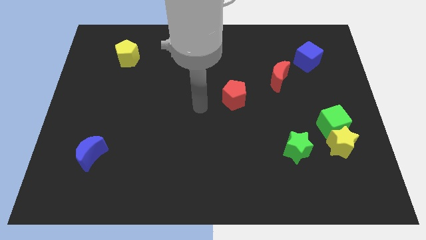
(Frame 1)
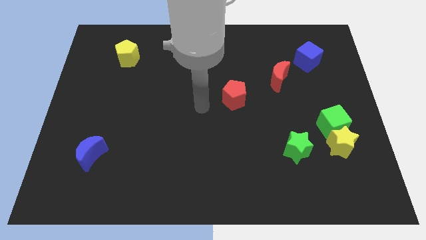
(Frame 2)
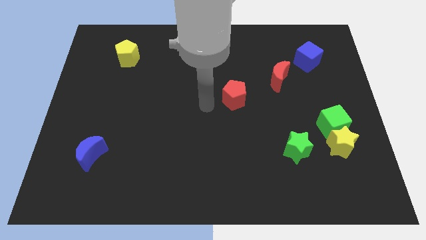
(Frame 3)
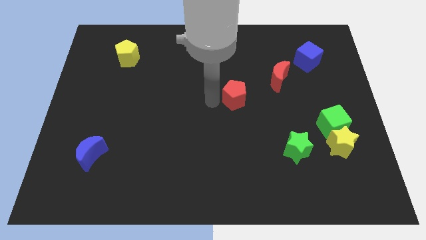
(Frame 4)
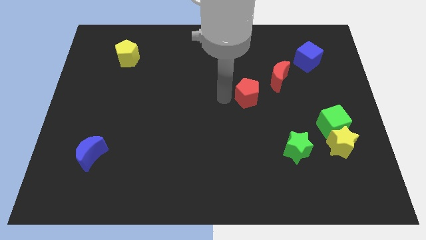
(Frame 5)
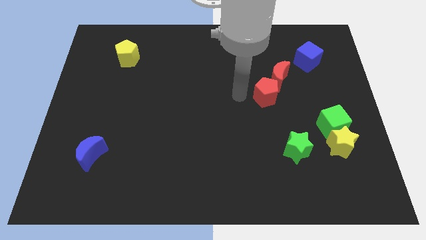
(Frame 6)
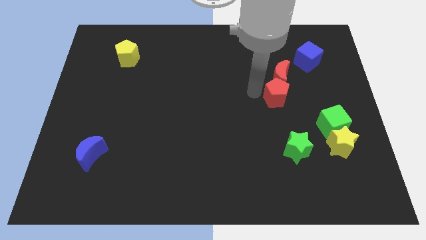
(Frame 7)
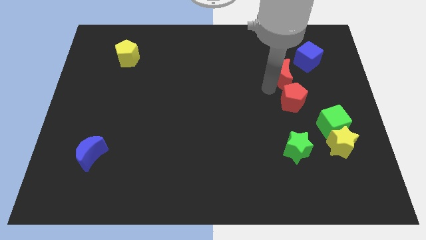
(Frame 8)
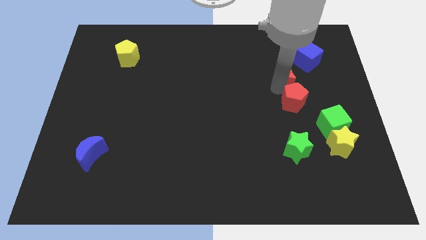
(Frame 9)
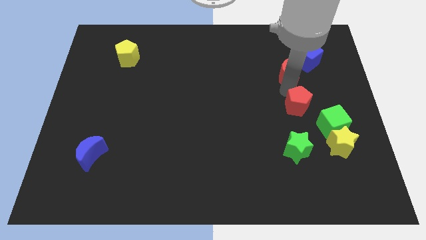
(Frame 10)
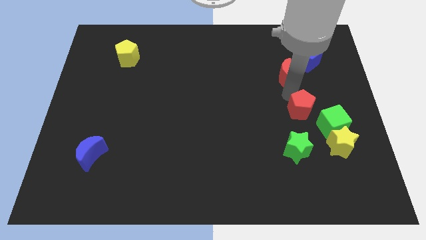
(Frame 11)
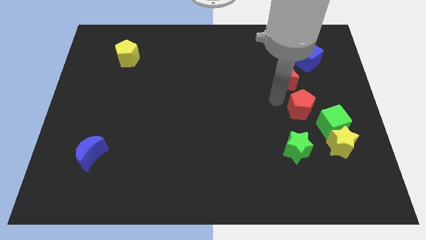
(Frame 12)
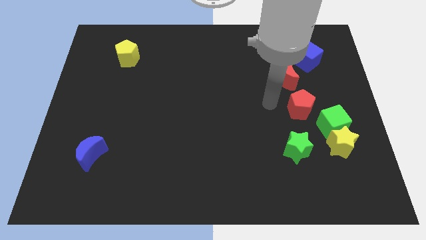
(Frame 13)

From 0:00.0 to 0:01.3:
push the red pentagon at the bottom of the red moon

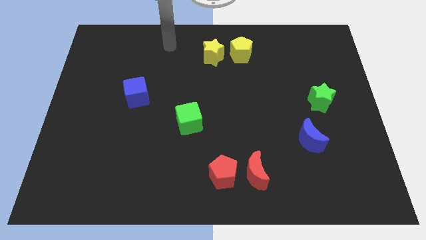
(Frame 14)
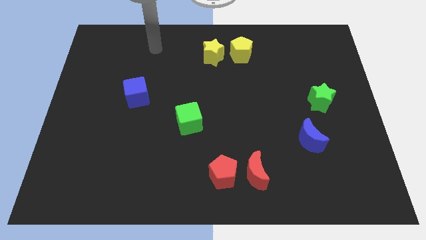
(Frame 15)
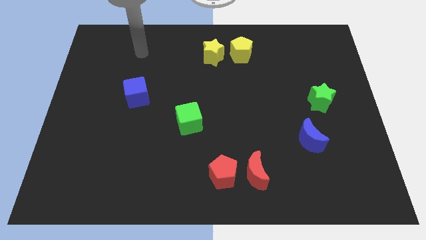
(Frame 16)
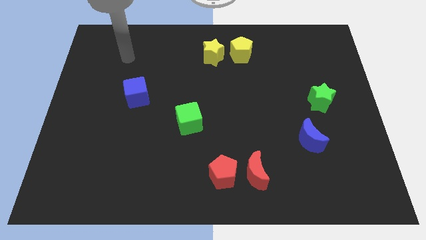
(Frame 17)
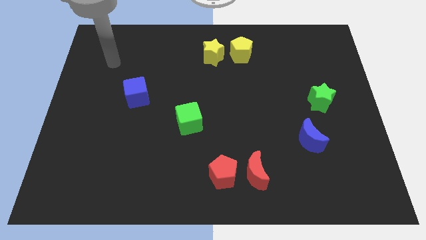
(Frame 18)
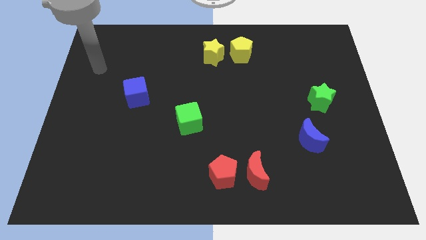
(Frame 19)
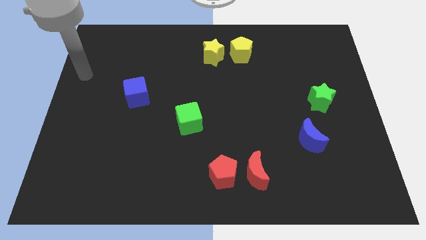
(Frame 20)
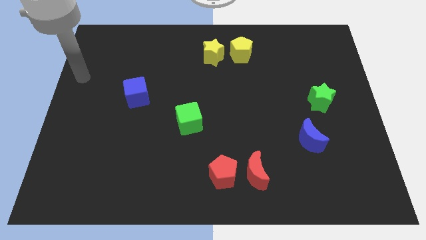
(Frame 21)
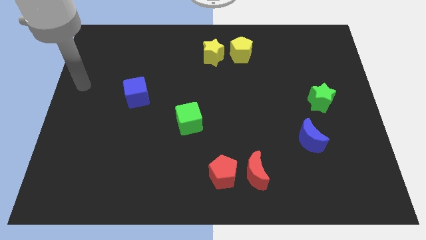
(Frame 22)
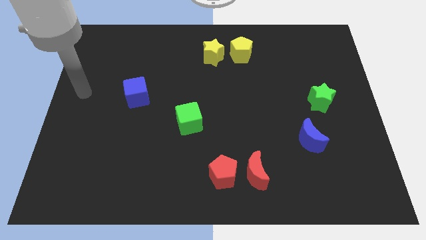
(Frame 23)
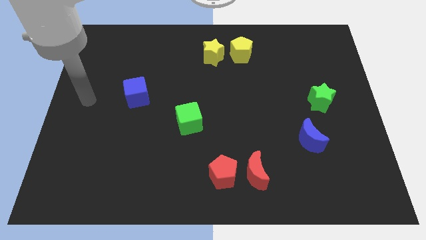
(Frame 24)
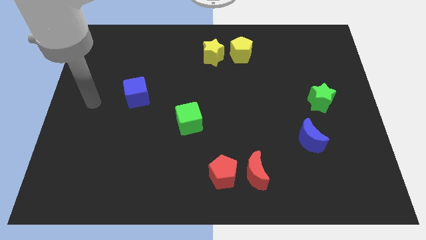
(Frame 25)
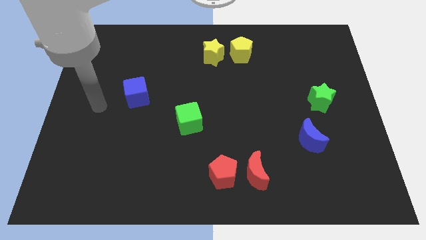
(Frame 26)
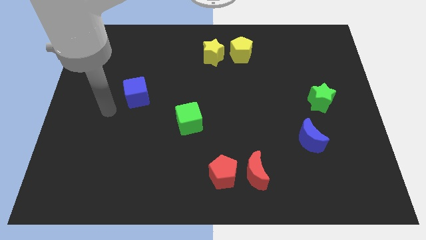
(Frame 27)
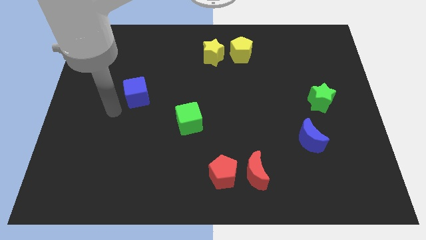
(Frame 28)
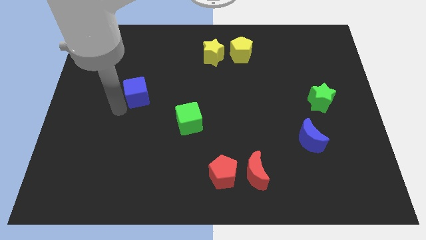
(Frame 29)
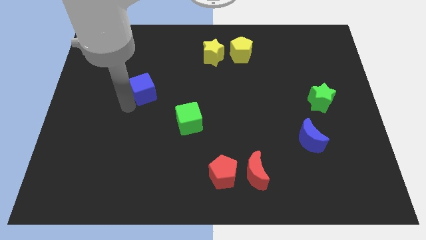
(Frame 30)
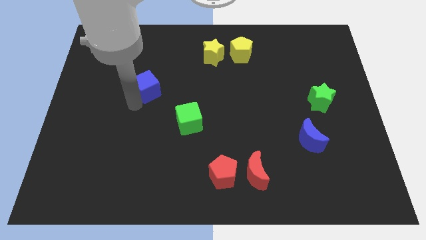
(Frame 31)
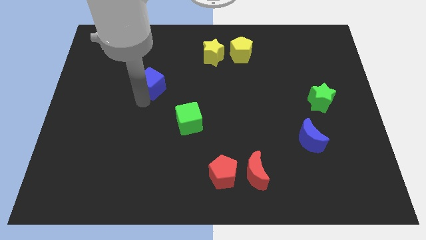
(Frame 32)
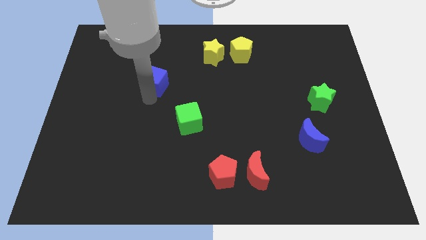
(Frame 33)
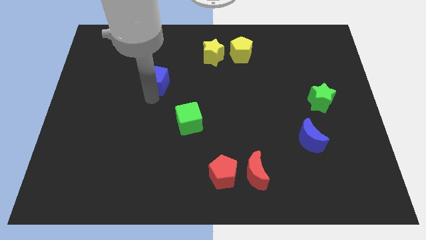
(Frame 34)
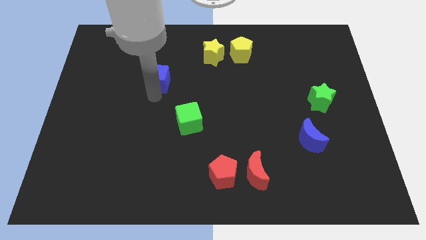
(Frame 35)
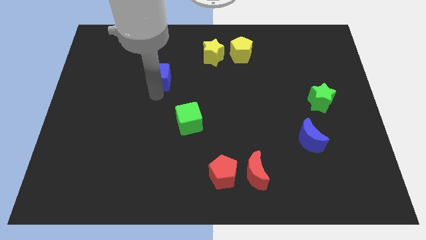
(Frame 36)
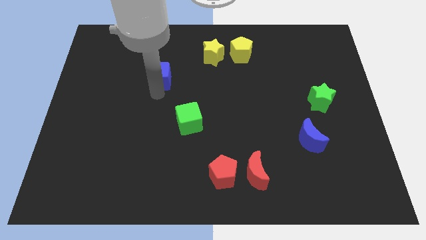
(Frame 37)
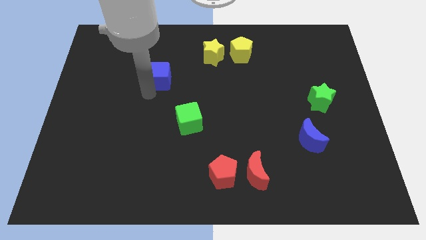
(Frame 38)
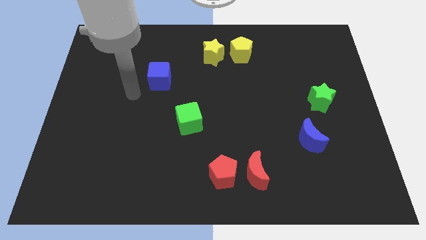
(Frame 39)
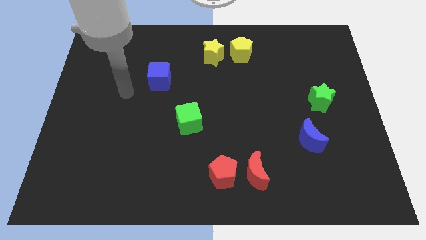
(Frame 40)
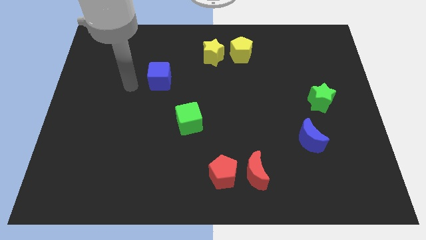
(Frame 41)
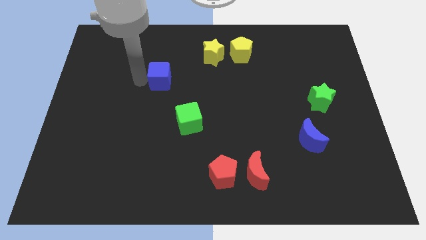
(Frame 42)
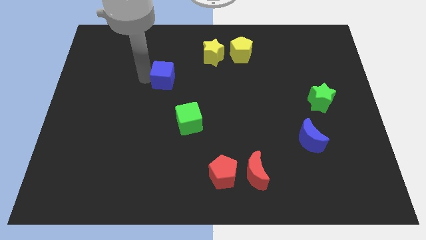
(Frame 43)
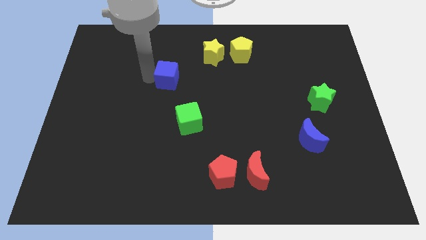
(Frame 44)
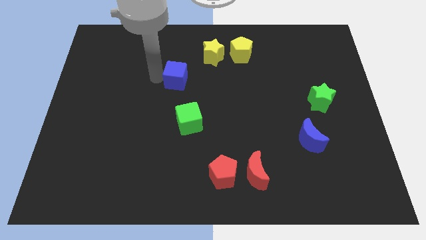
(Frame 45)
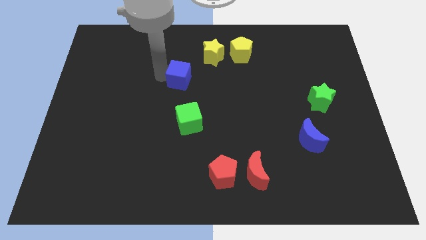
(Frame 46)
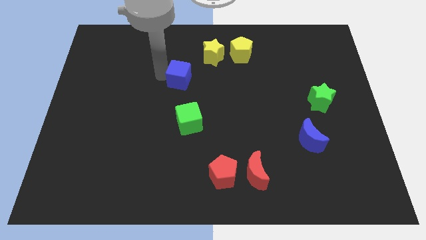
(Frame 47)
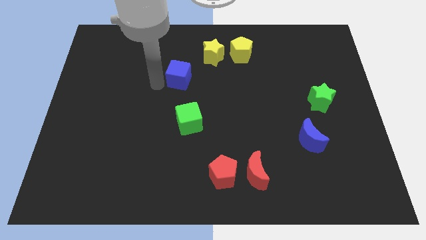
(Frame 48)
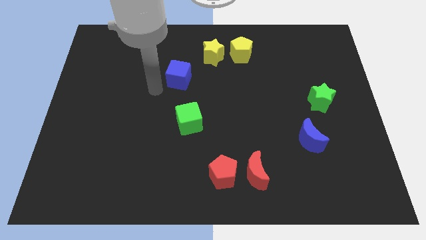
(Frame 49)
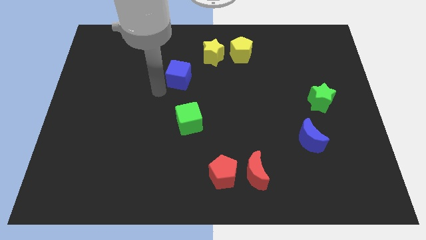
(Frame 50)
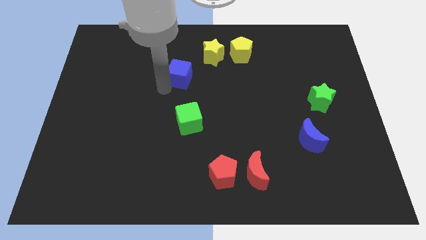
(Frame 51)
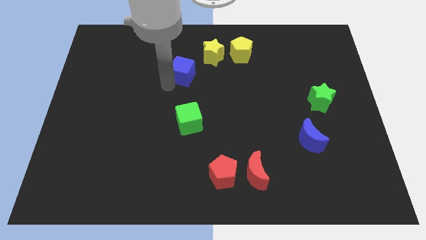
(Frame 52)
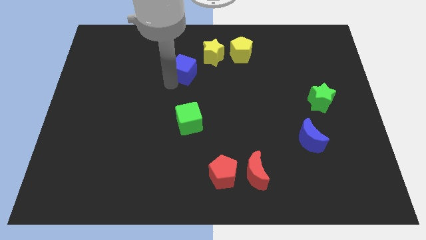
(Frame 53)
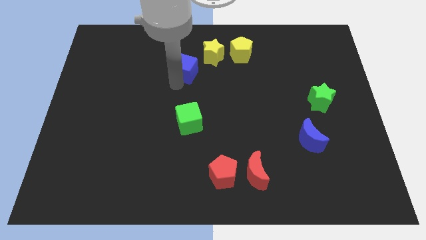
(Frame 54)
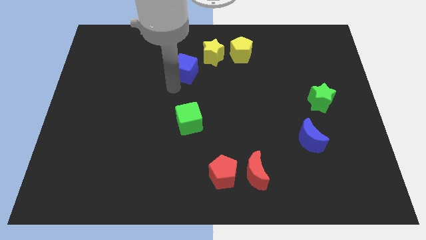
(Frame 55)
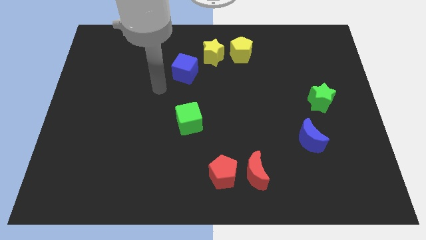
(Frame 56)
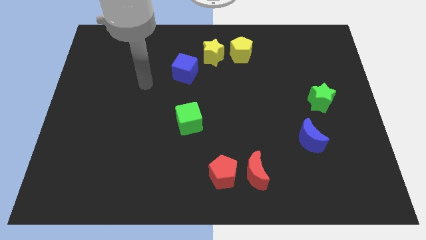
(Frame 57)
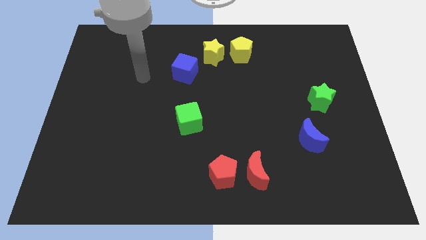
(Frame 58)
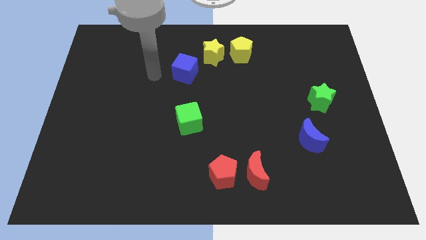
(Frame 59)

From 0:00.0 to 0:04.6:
push the blue cube to the left of the yellow star

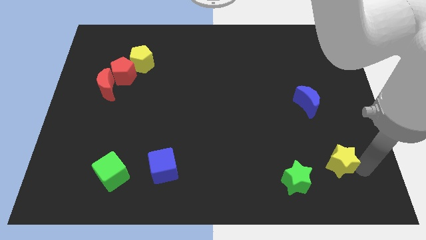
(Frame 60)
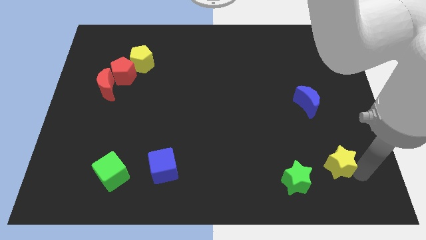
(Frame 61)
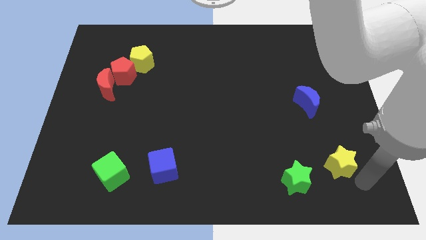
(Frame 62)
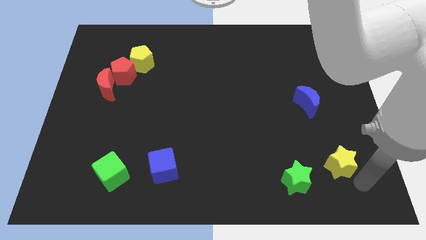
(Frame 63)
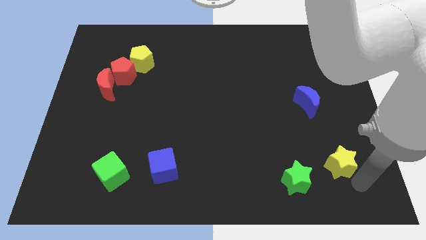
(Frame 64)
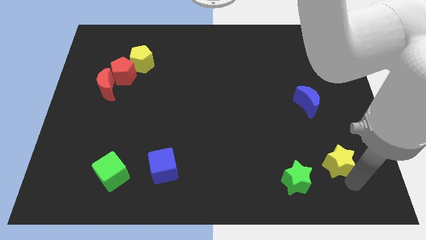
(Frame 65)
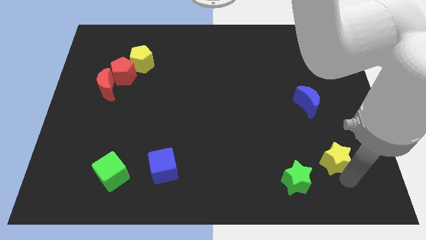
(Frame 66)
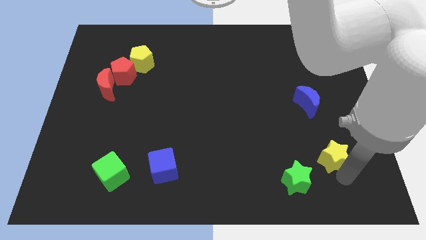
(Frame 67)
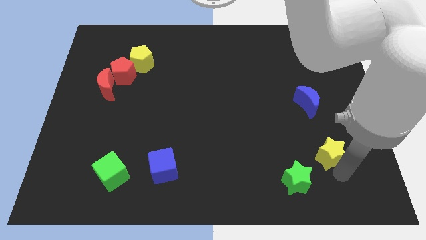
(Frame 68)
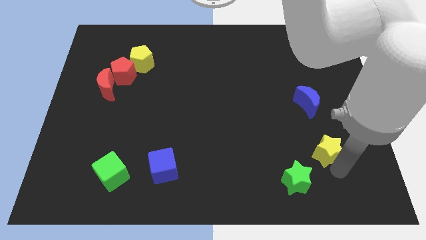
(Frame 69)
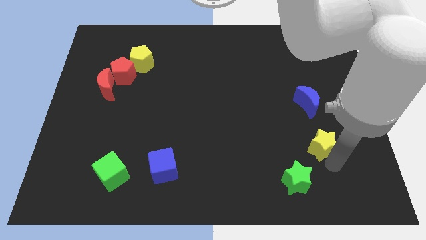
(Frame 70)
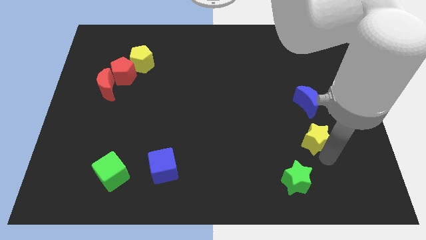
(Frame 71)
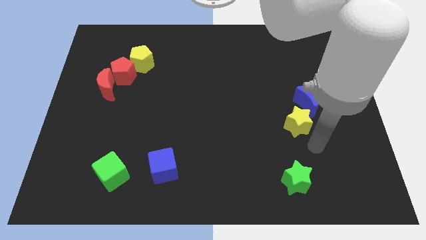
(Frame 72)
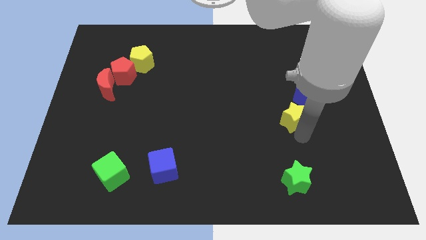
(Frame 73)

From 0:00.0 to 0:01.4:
move the yellow star to the bottom of the blue crescent

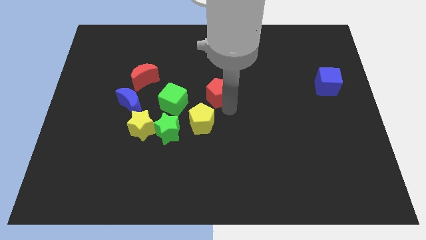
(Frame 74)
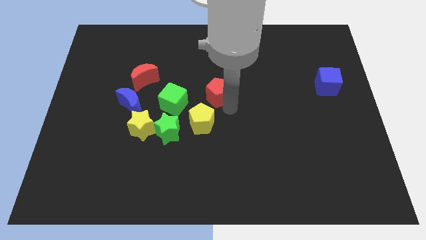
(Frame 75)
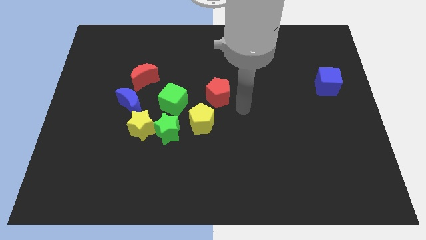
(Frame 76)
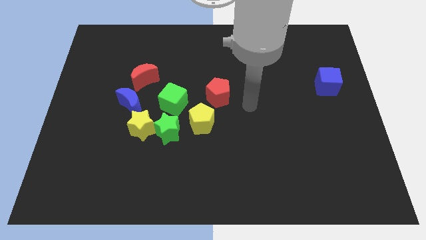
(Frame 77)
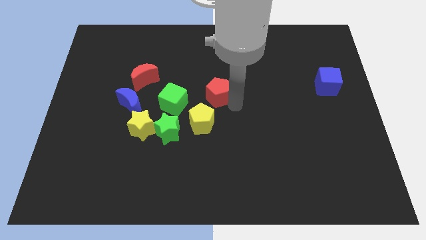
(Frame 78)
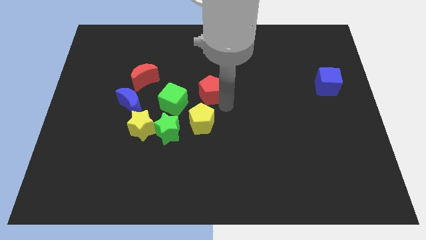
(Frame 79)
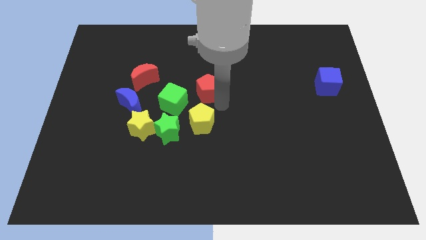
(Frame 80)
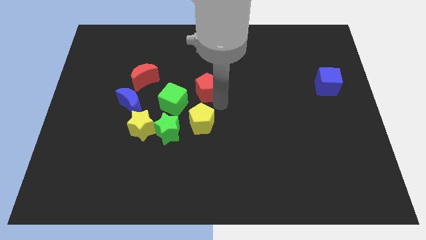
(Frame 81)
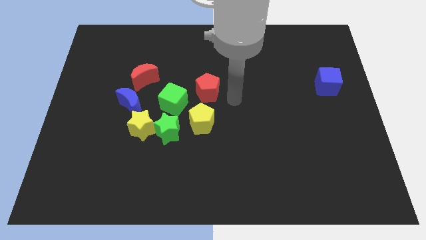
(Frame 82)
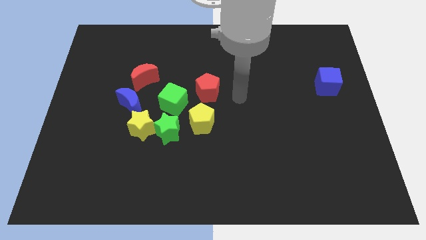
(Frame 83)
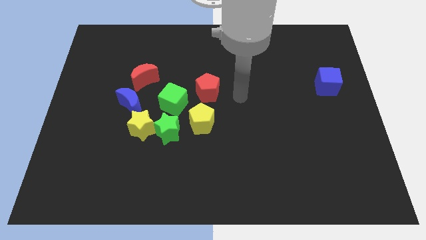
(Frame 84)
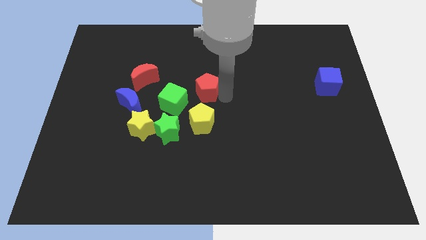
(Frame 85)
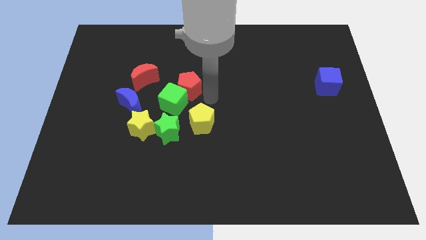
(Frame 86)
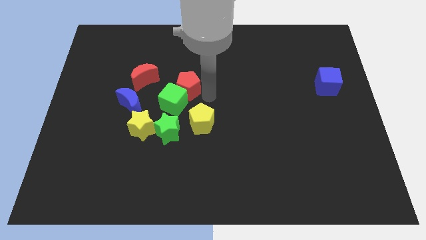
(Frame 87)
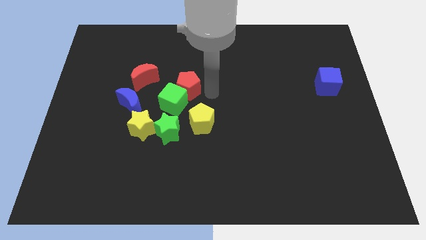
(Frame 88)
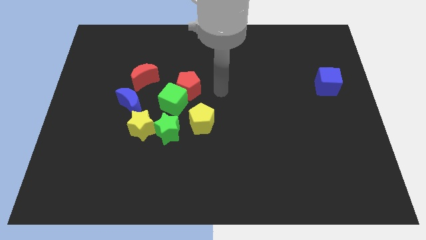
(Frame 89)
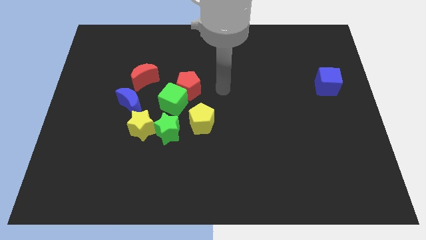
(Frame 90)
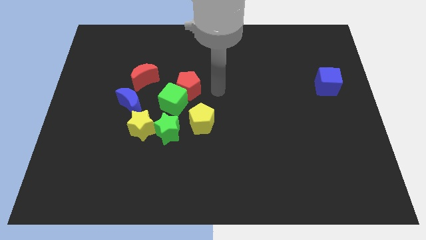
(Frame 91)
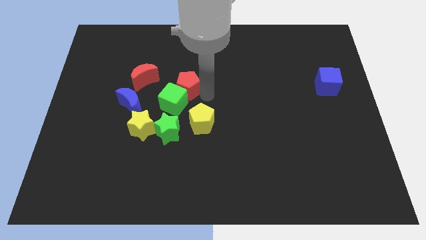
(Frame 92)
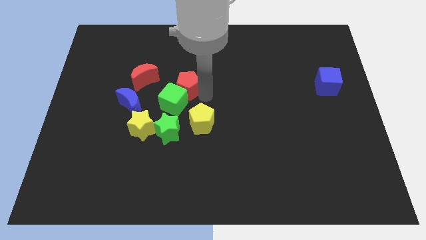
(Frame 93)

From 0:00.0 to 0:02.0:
move the red pentagon diagonally top right to the green cube
